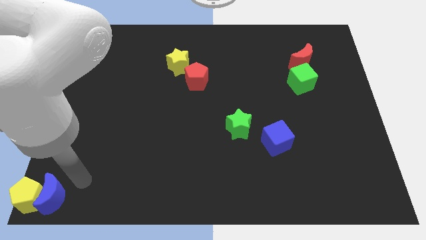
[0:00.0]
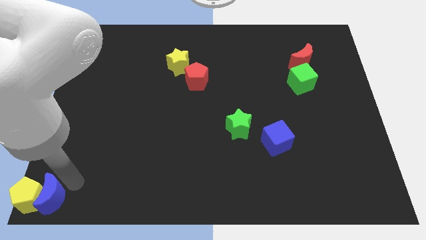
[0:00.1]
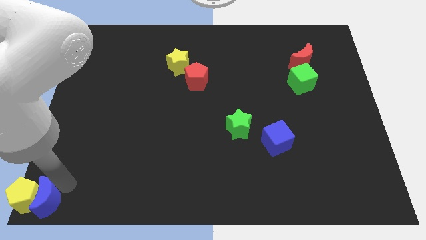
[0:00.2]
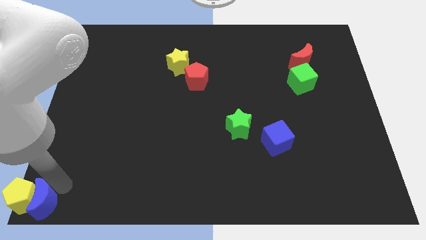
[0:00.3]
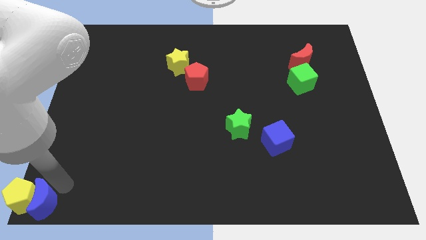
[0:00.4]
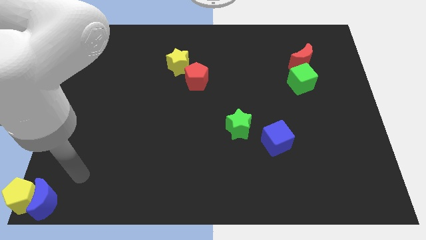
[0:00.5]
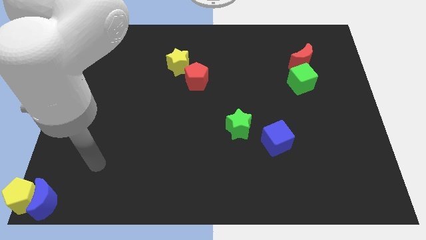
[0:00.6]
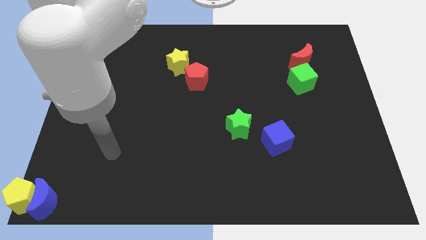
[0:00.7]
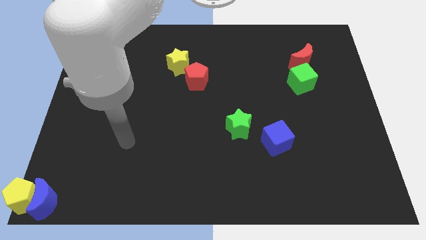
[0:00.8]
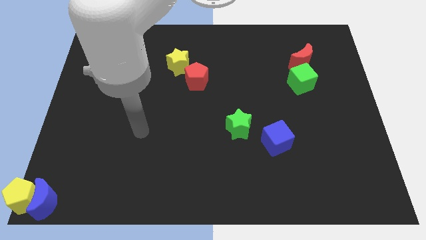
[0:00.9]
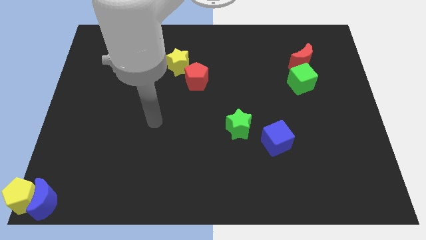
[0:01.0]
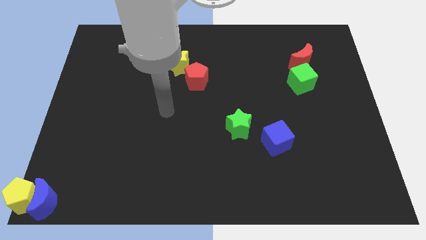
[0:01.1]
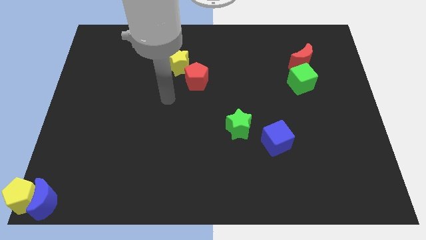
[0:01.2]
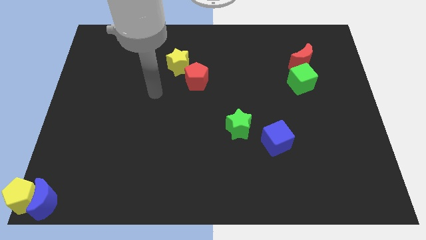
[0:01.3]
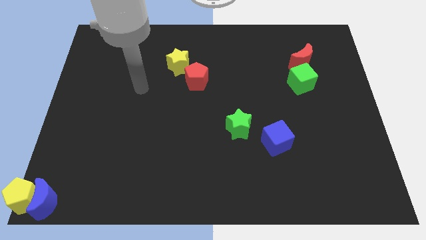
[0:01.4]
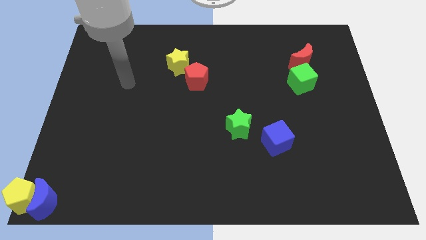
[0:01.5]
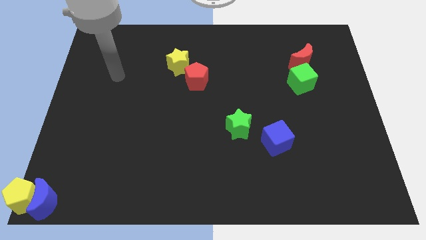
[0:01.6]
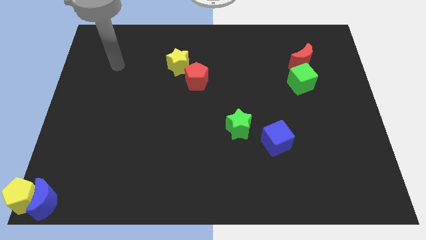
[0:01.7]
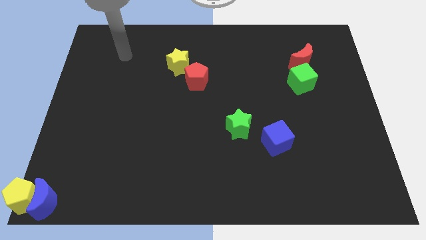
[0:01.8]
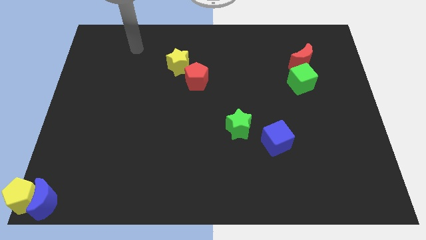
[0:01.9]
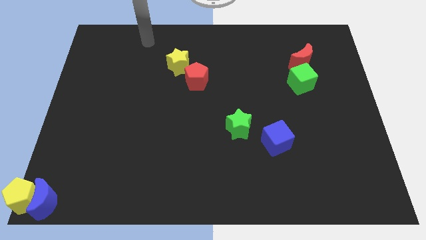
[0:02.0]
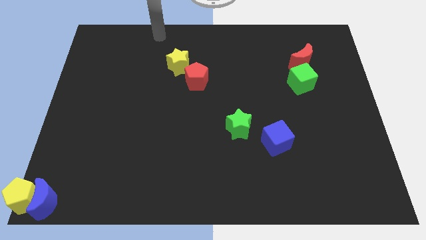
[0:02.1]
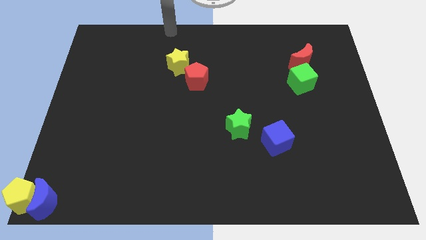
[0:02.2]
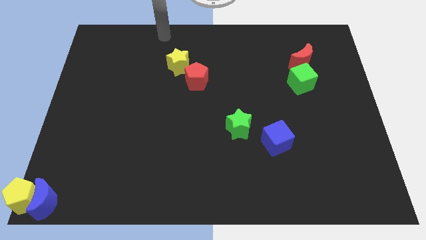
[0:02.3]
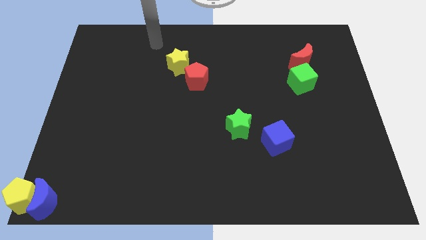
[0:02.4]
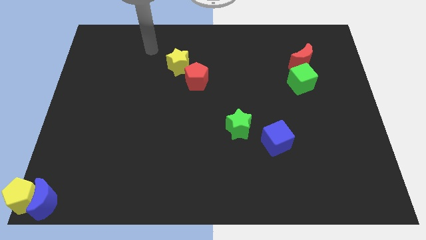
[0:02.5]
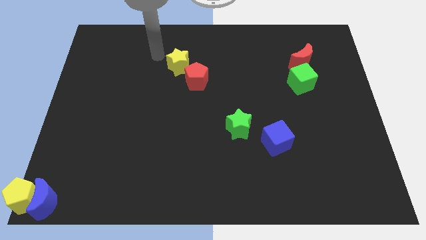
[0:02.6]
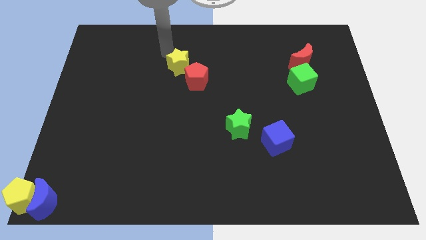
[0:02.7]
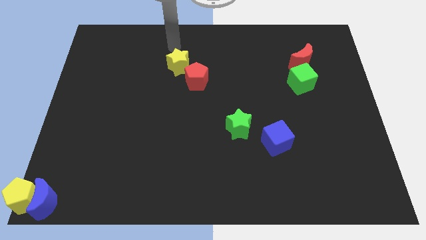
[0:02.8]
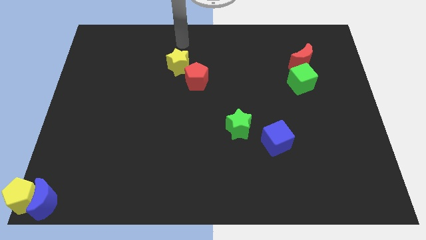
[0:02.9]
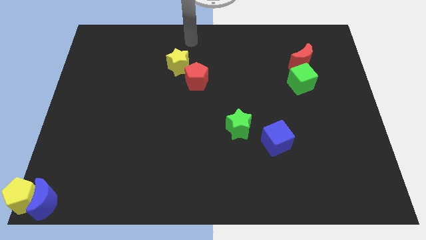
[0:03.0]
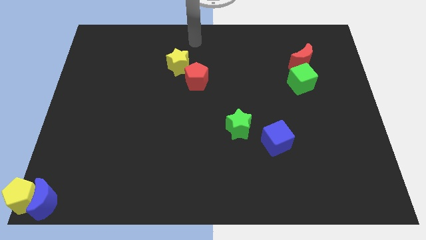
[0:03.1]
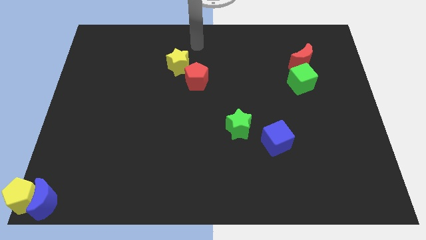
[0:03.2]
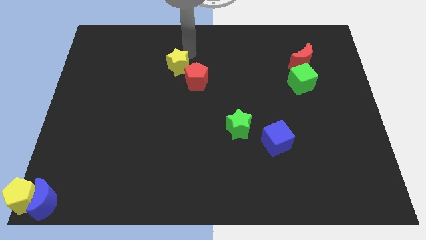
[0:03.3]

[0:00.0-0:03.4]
move your arm on top of the yellow star

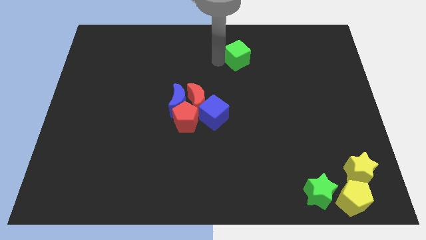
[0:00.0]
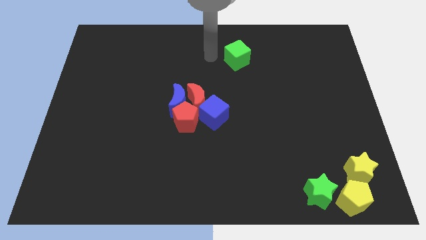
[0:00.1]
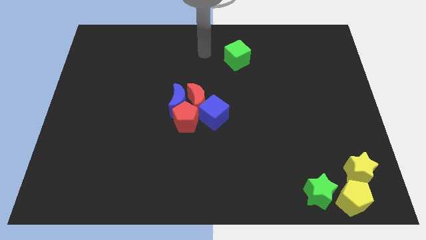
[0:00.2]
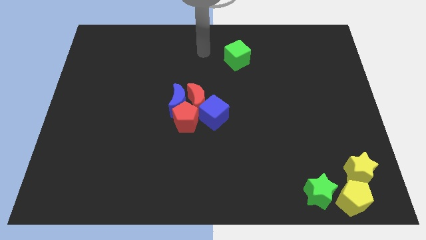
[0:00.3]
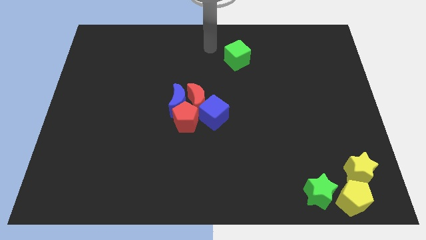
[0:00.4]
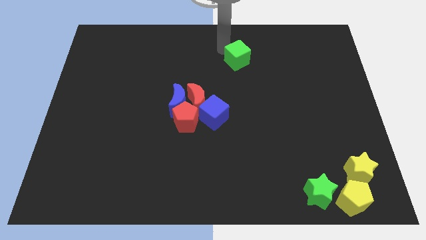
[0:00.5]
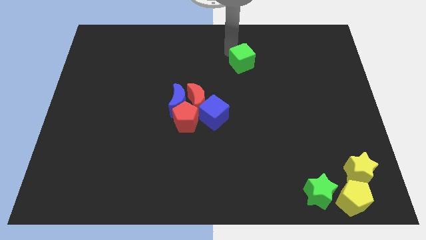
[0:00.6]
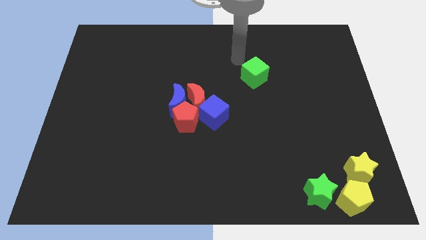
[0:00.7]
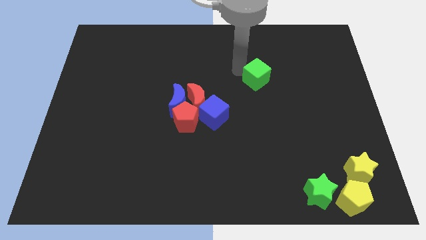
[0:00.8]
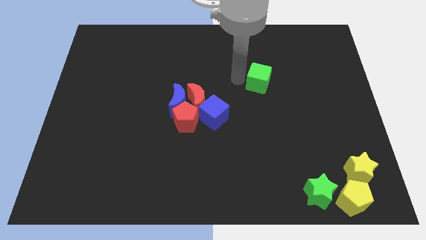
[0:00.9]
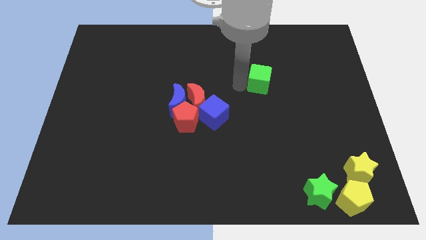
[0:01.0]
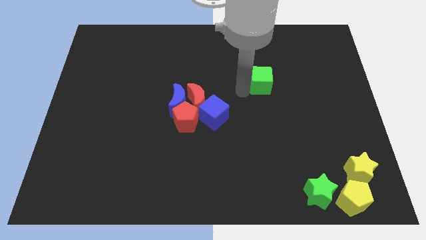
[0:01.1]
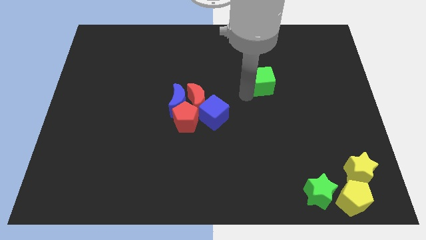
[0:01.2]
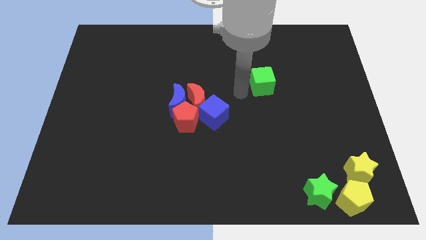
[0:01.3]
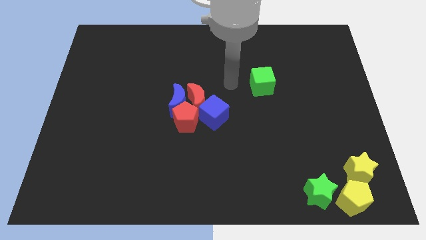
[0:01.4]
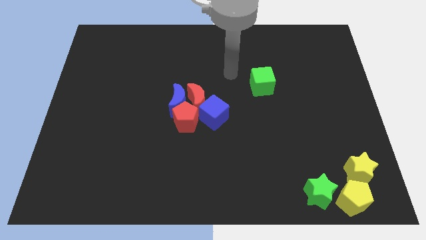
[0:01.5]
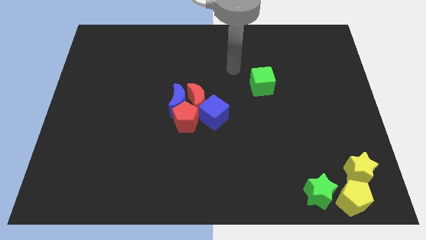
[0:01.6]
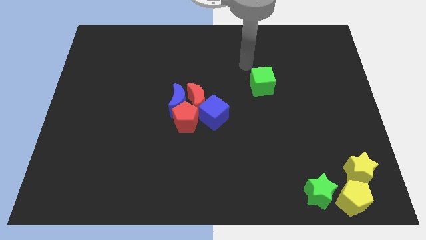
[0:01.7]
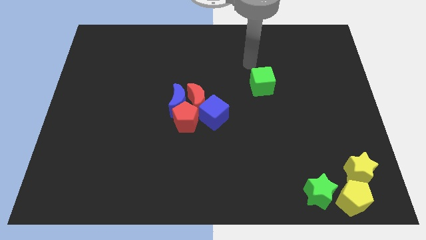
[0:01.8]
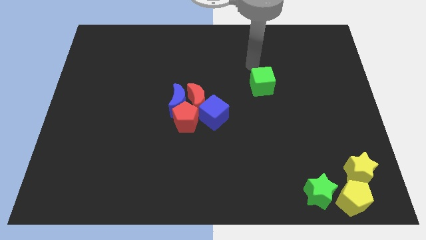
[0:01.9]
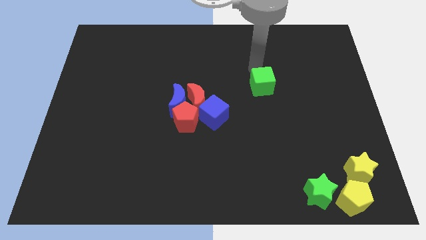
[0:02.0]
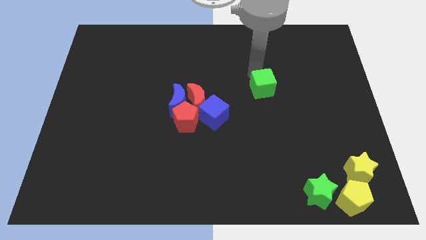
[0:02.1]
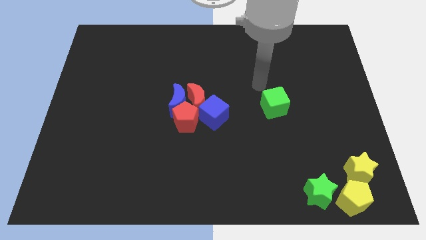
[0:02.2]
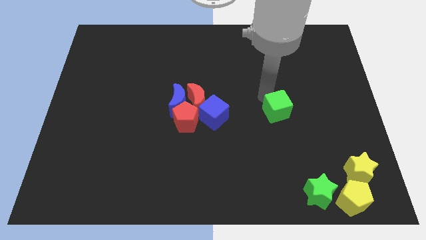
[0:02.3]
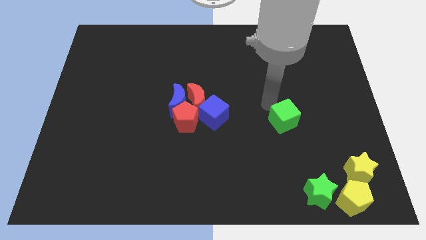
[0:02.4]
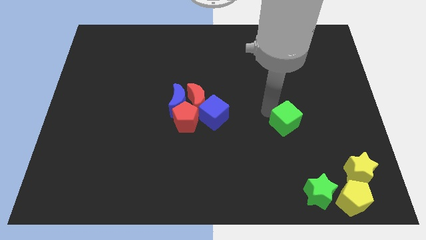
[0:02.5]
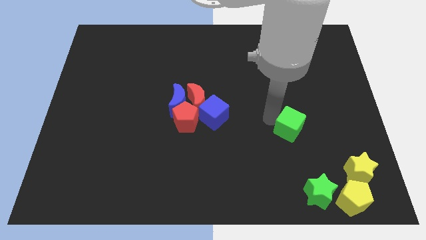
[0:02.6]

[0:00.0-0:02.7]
push the green cube towards bottom

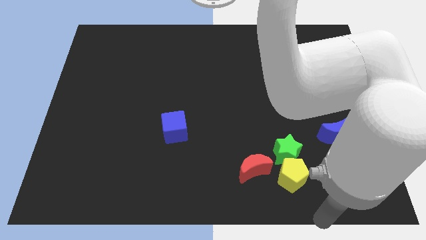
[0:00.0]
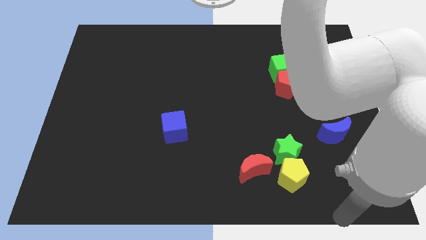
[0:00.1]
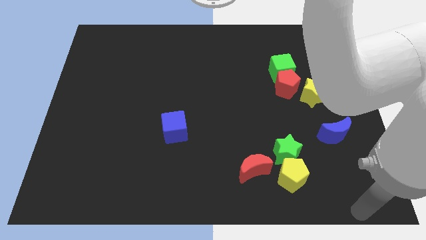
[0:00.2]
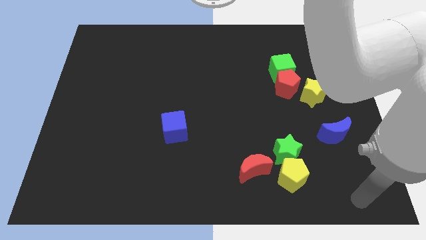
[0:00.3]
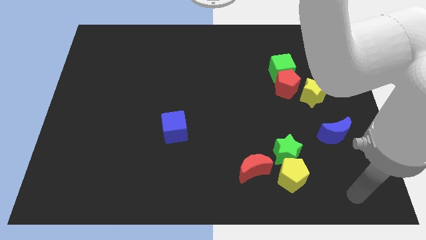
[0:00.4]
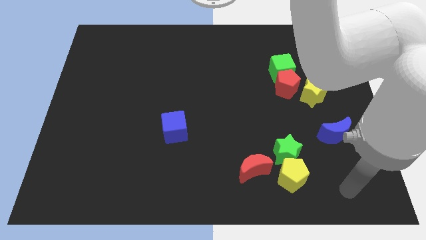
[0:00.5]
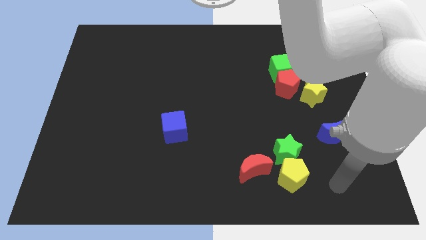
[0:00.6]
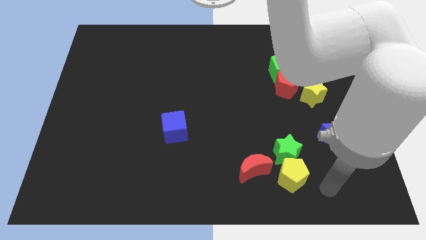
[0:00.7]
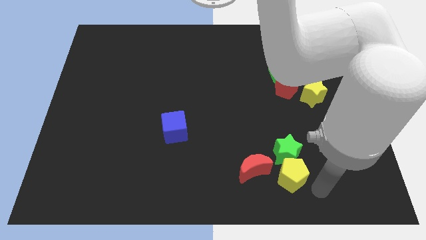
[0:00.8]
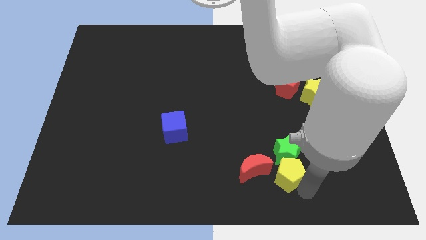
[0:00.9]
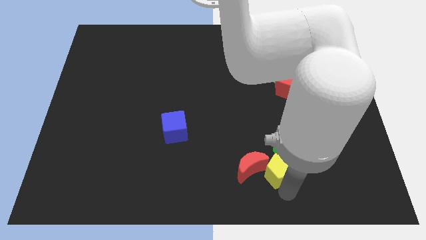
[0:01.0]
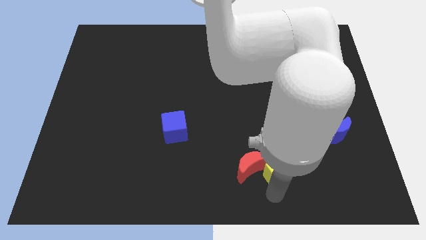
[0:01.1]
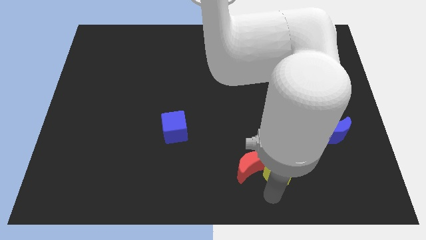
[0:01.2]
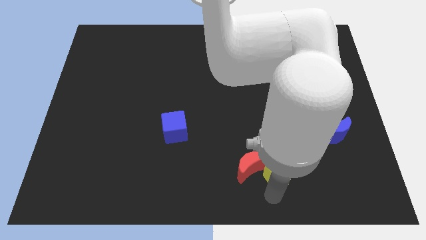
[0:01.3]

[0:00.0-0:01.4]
push the yellow pentagon into the red crescent

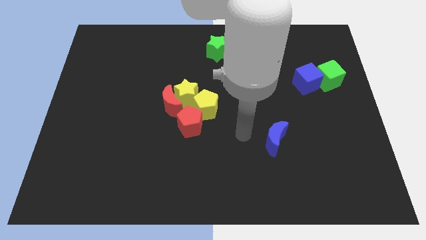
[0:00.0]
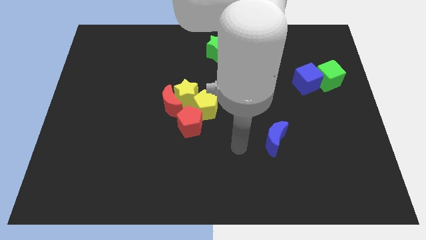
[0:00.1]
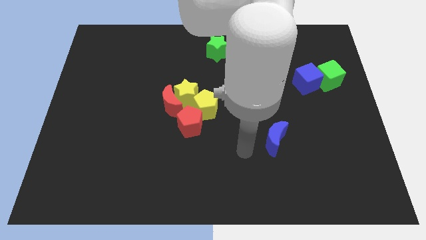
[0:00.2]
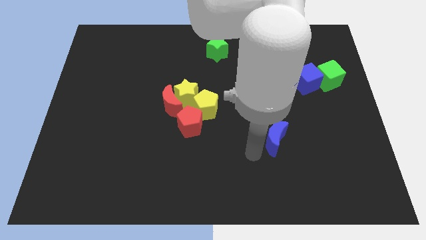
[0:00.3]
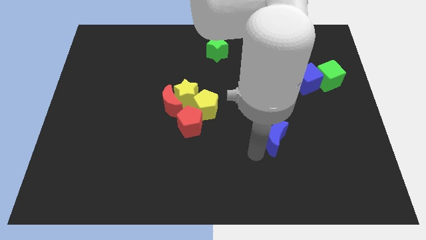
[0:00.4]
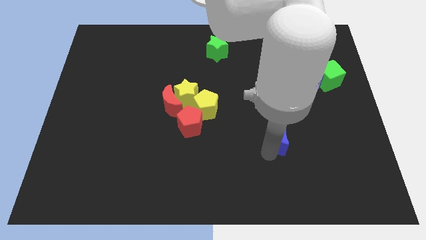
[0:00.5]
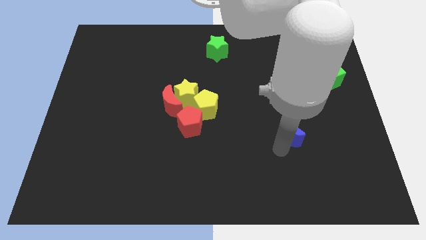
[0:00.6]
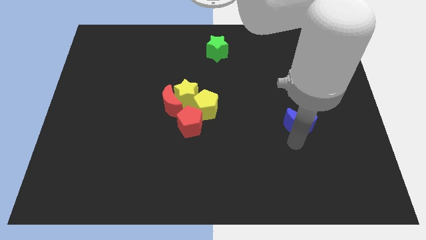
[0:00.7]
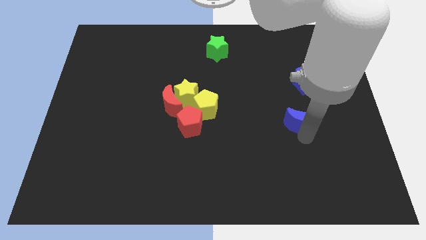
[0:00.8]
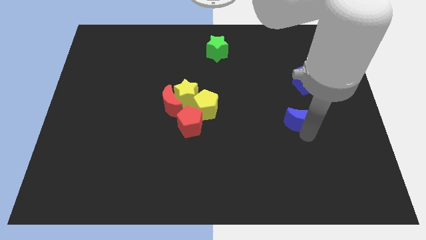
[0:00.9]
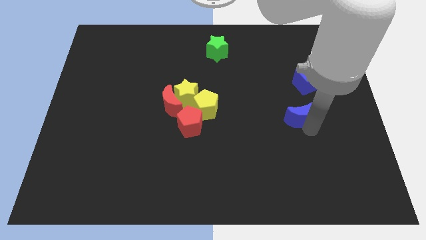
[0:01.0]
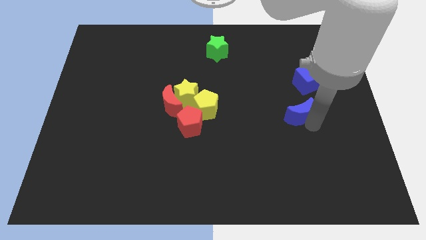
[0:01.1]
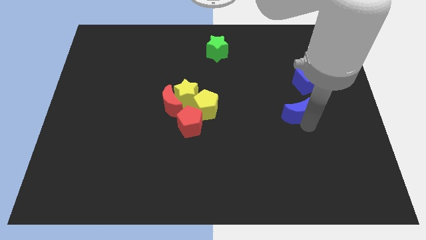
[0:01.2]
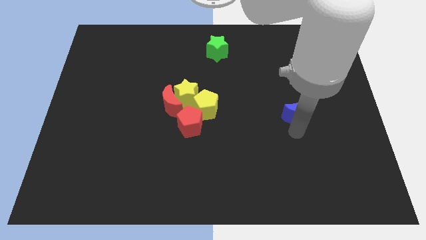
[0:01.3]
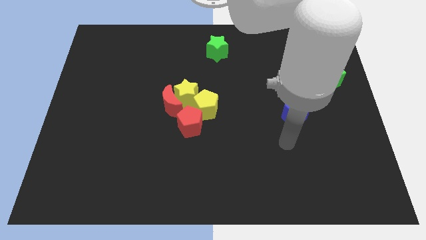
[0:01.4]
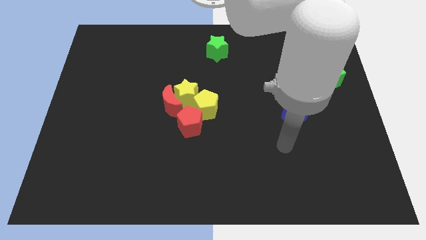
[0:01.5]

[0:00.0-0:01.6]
place the blue moon below the blue cube
